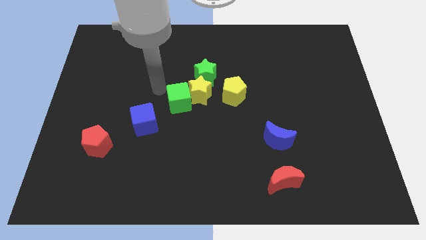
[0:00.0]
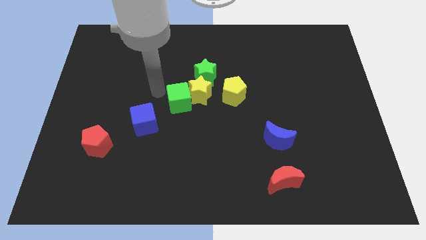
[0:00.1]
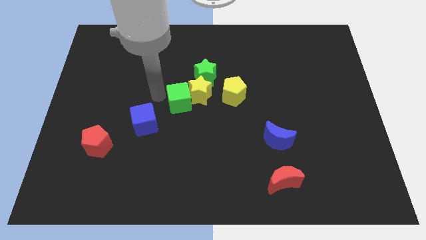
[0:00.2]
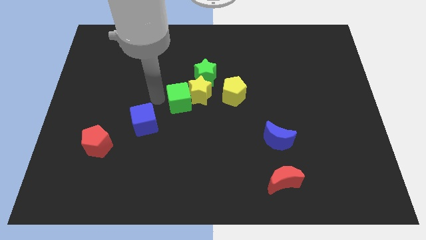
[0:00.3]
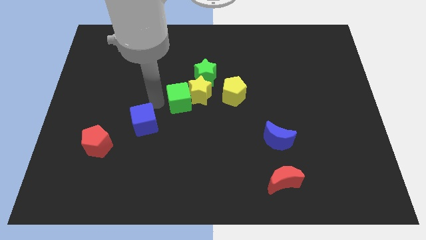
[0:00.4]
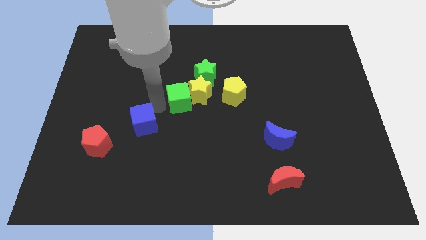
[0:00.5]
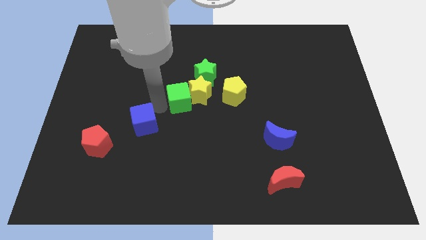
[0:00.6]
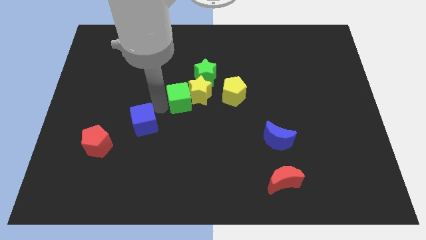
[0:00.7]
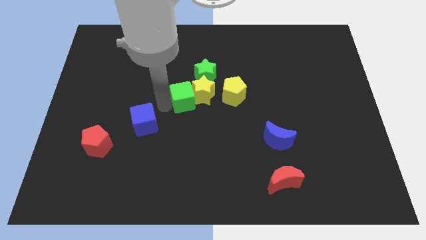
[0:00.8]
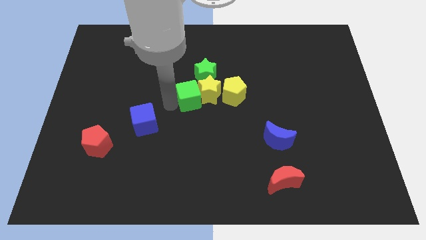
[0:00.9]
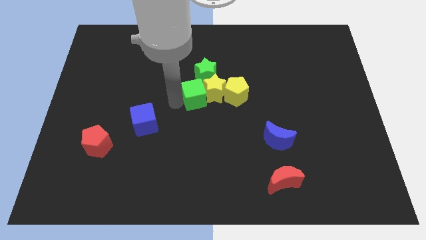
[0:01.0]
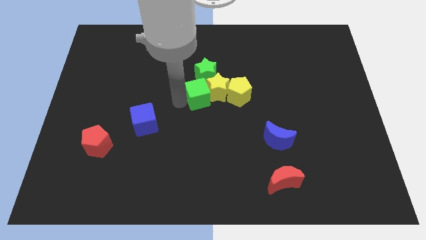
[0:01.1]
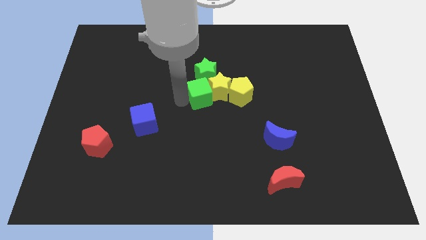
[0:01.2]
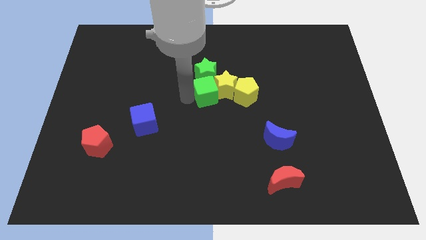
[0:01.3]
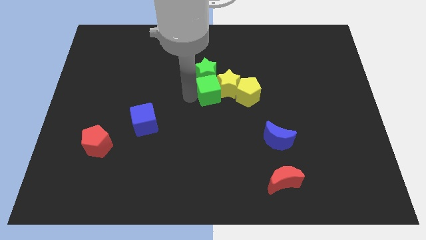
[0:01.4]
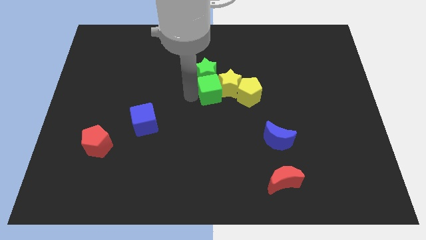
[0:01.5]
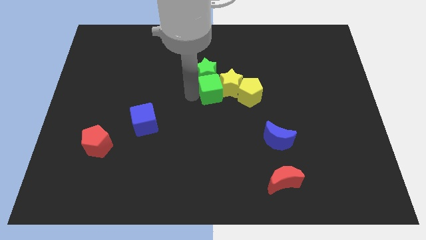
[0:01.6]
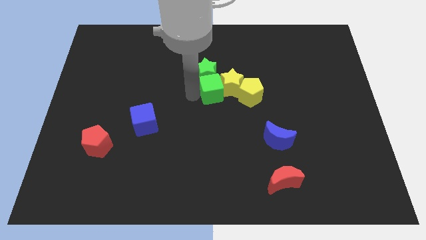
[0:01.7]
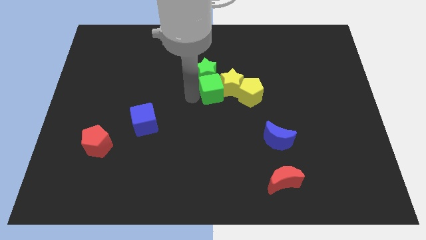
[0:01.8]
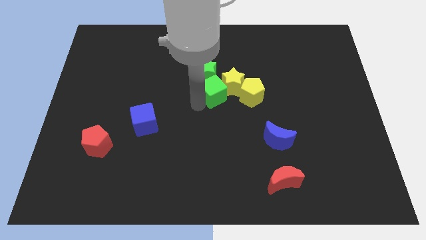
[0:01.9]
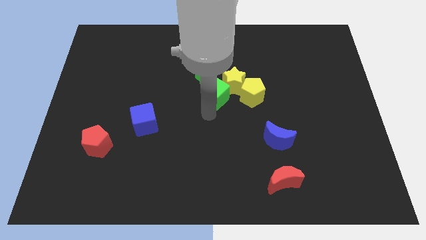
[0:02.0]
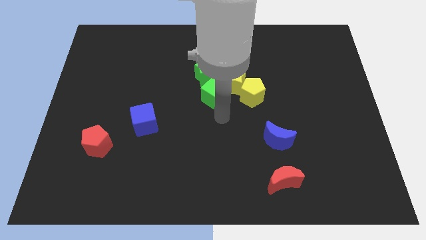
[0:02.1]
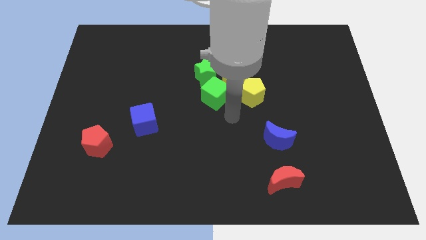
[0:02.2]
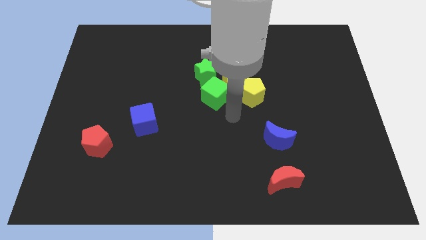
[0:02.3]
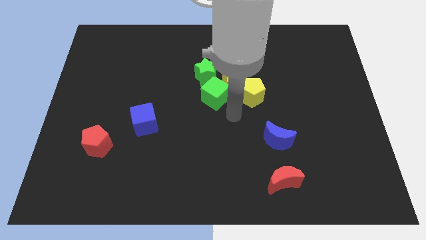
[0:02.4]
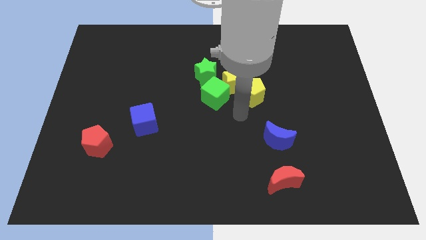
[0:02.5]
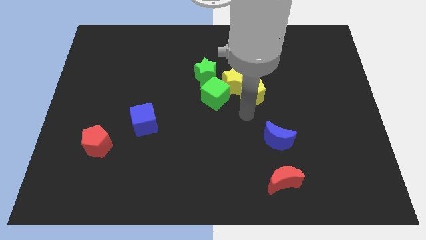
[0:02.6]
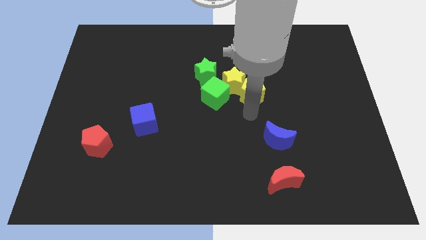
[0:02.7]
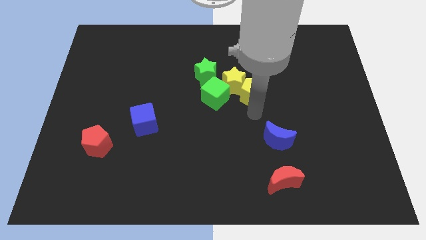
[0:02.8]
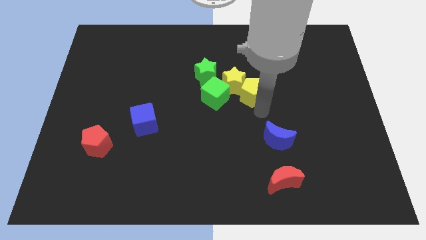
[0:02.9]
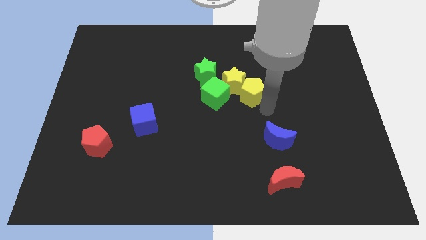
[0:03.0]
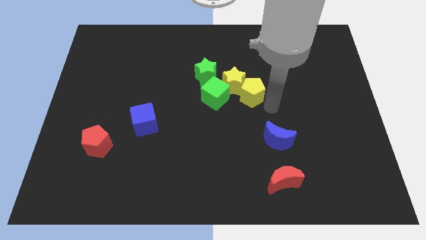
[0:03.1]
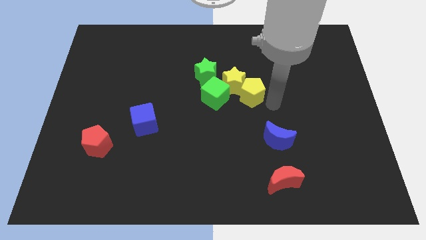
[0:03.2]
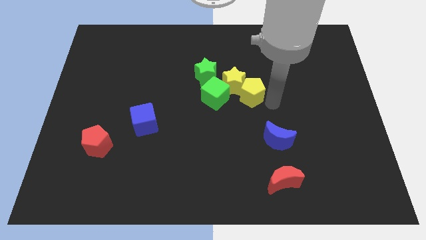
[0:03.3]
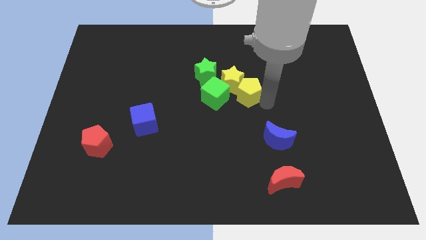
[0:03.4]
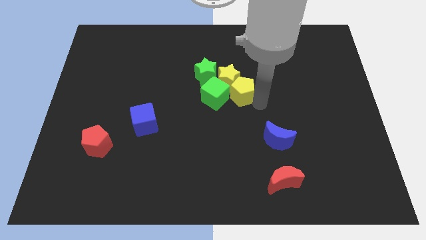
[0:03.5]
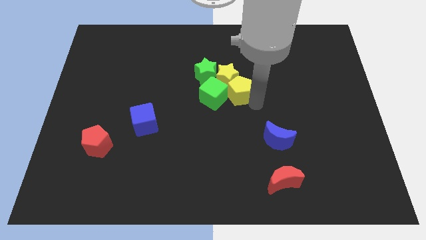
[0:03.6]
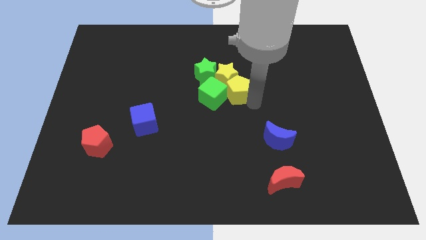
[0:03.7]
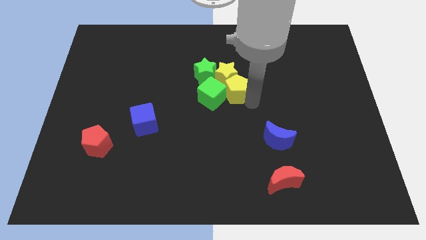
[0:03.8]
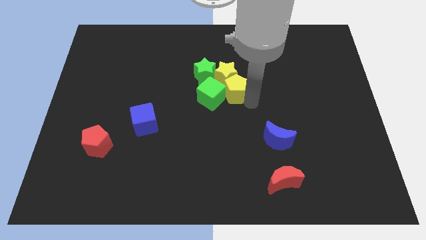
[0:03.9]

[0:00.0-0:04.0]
place the green cube and the yellow pentagon together at the bottom of the green and yellow stars

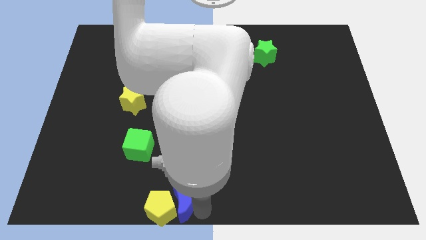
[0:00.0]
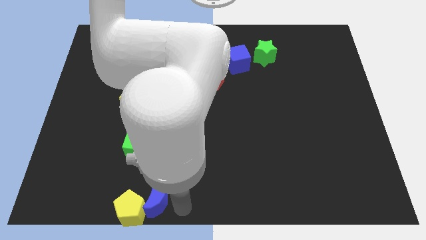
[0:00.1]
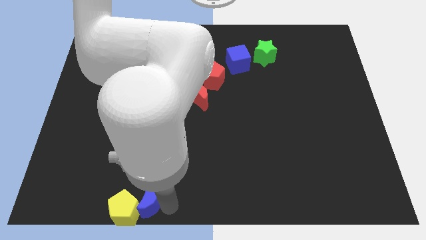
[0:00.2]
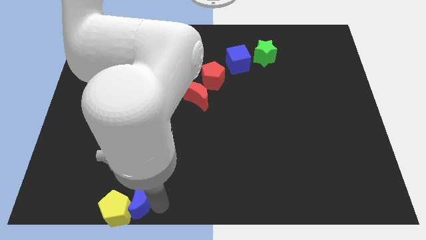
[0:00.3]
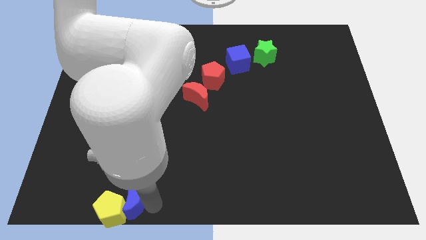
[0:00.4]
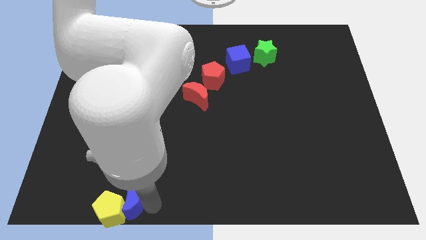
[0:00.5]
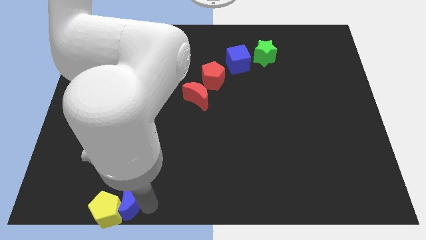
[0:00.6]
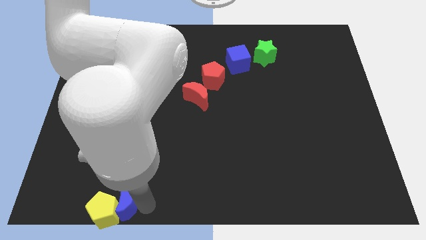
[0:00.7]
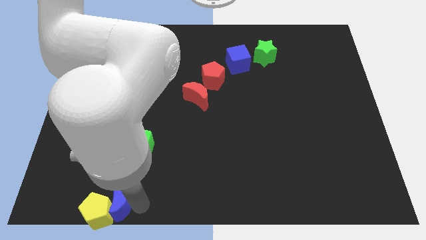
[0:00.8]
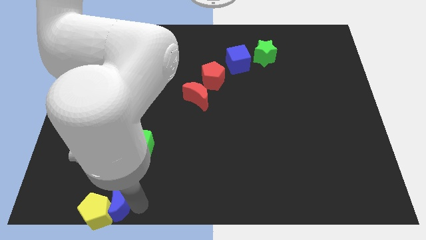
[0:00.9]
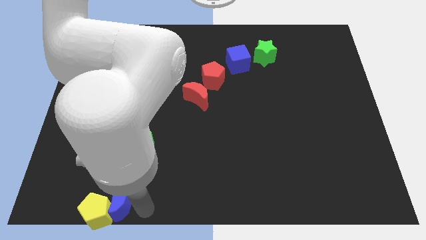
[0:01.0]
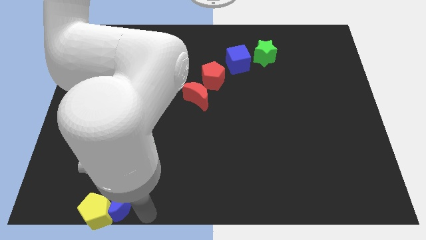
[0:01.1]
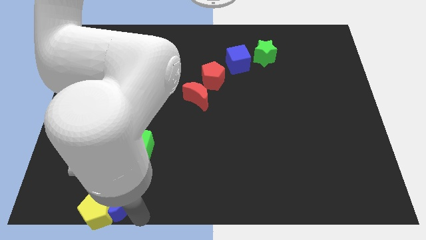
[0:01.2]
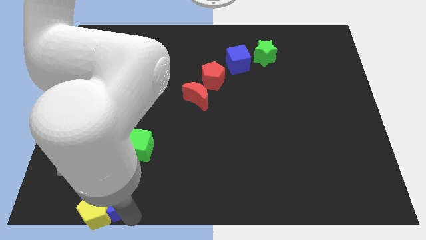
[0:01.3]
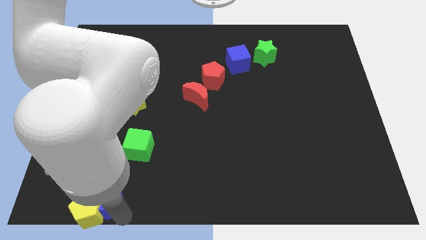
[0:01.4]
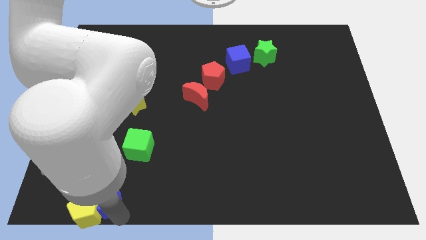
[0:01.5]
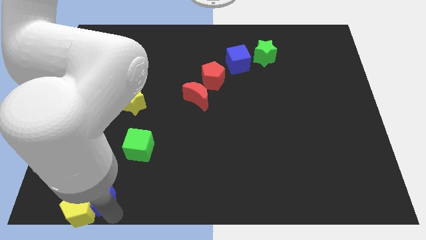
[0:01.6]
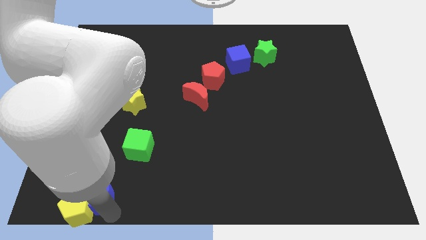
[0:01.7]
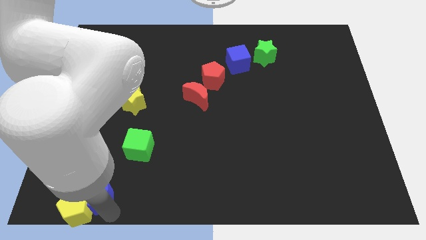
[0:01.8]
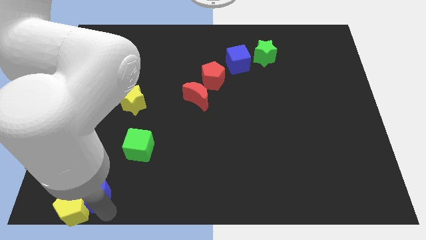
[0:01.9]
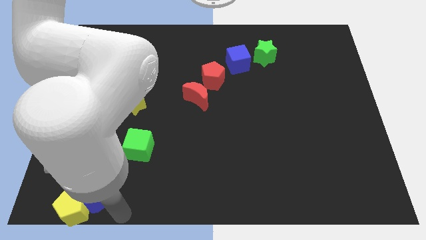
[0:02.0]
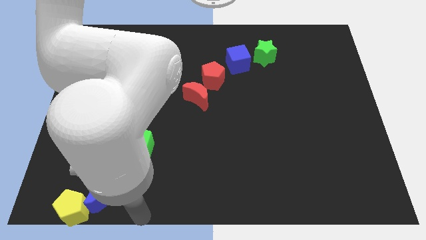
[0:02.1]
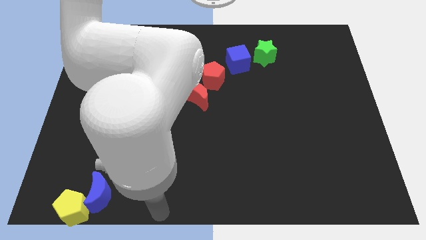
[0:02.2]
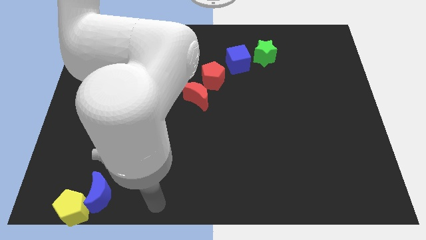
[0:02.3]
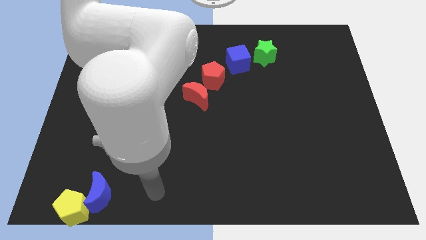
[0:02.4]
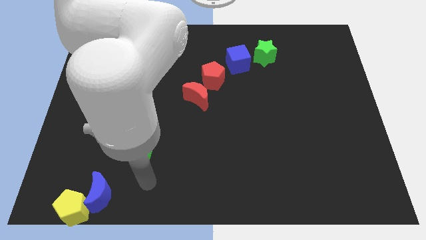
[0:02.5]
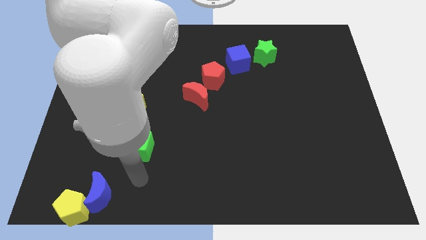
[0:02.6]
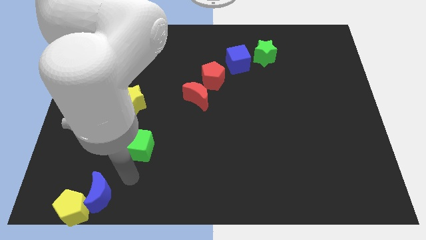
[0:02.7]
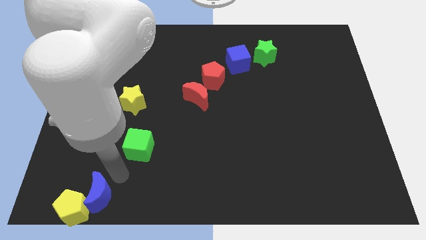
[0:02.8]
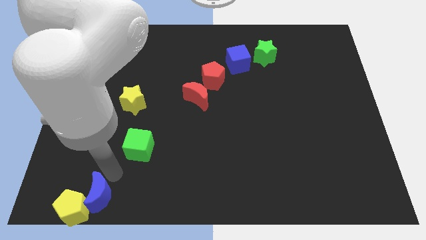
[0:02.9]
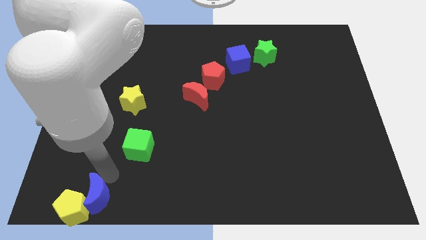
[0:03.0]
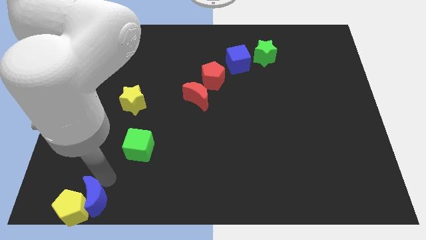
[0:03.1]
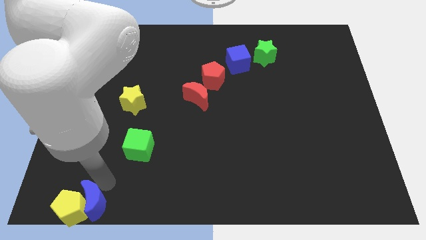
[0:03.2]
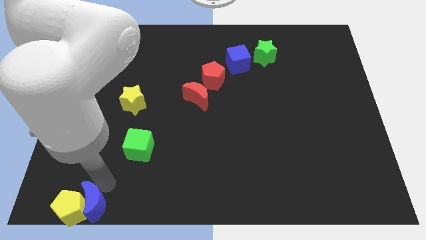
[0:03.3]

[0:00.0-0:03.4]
move the blue moon and yellow pentagon towards the bottom left of the board

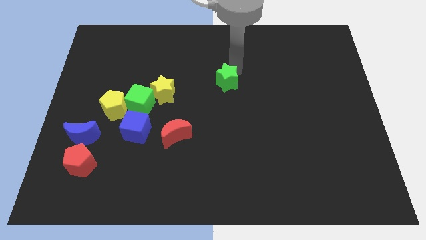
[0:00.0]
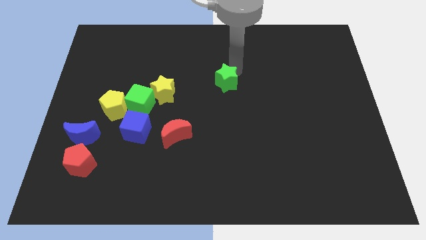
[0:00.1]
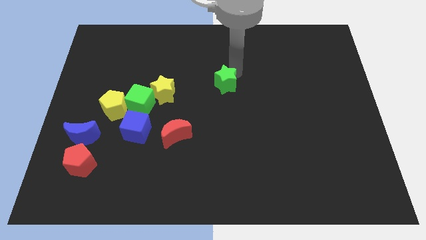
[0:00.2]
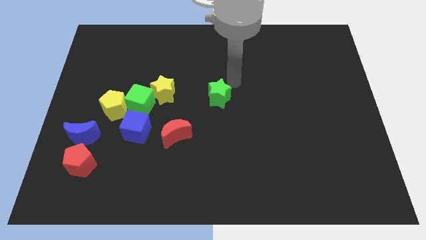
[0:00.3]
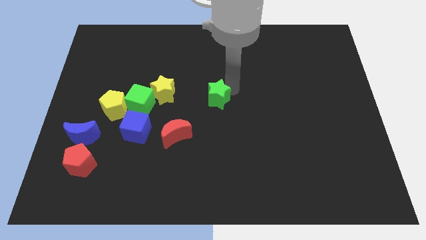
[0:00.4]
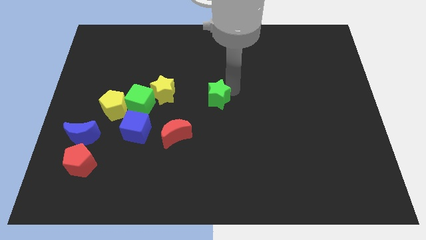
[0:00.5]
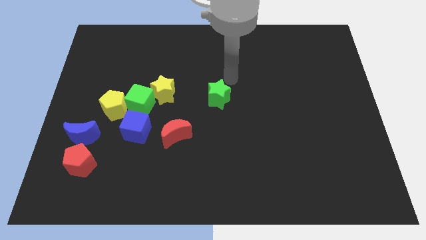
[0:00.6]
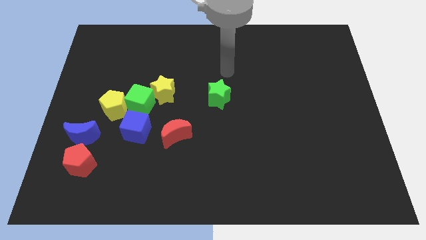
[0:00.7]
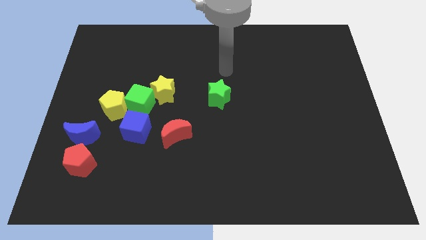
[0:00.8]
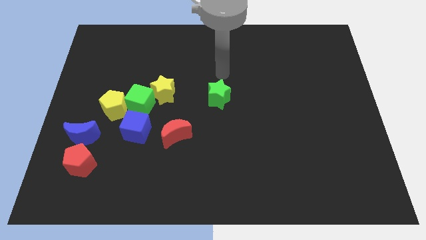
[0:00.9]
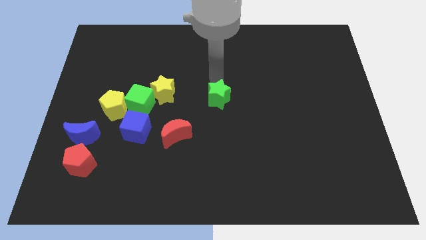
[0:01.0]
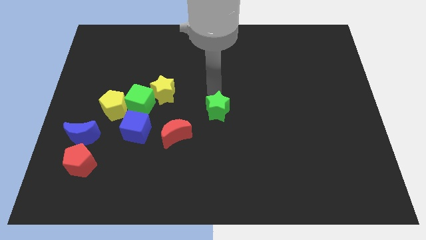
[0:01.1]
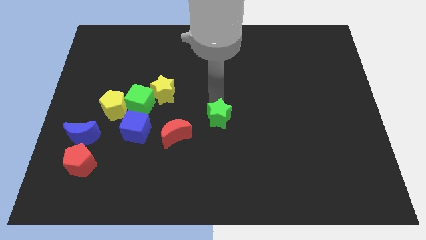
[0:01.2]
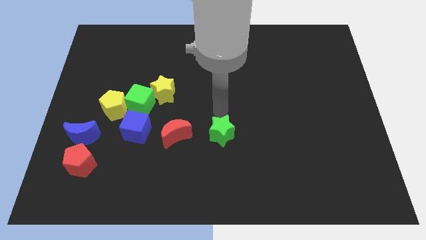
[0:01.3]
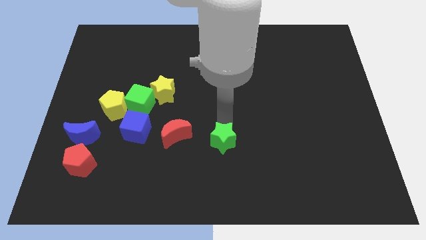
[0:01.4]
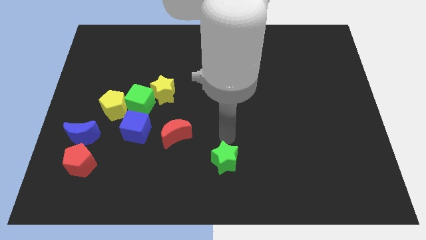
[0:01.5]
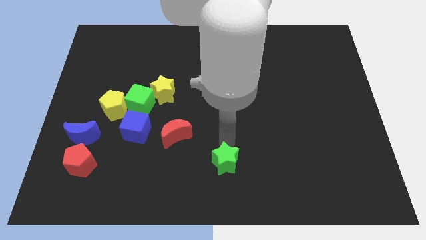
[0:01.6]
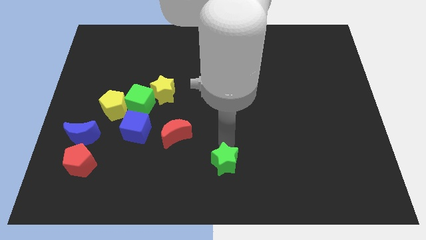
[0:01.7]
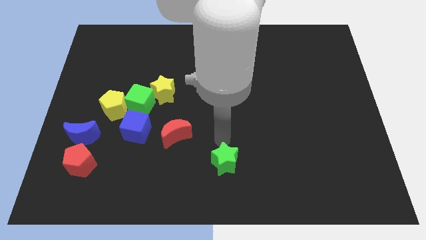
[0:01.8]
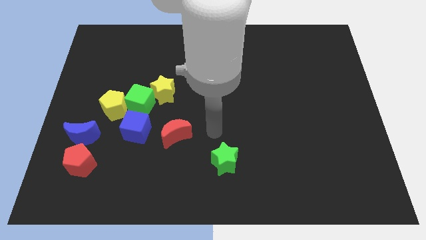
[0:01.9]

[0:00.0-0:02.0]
push the green star
